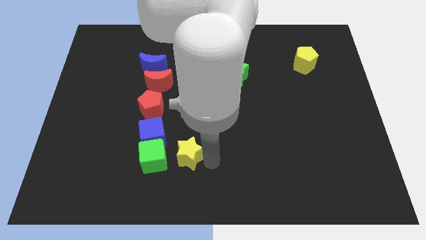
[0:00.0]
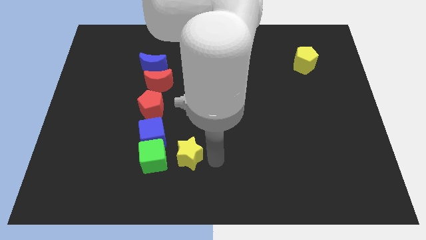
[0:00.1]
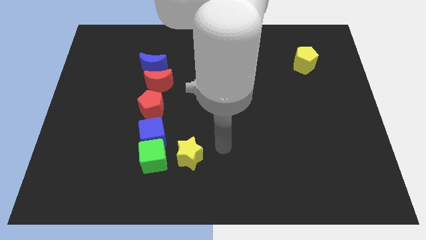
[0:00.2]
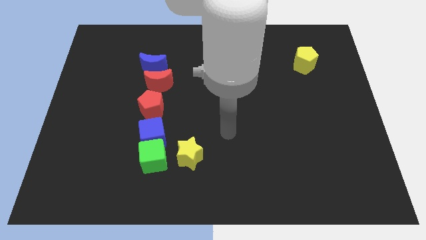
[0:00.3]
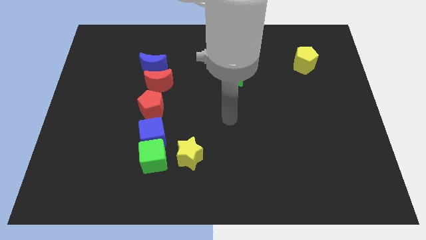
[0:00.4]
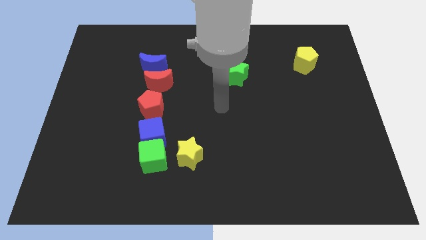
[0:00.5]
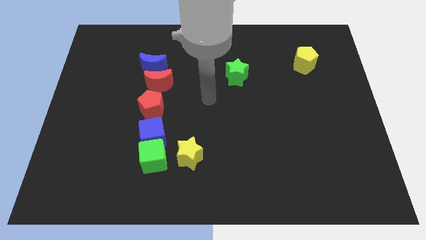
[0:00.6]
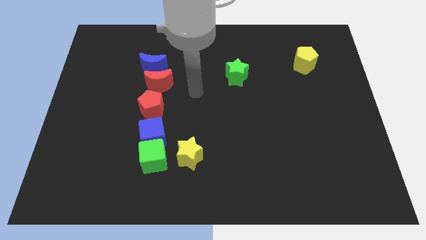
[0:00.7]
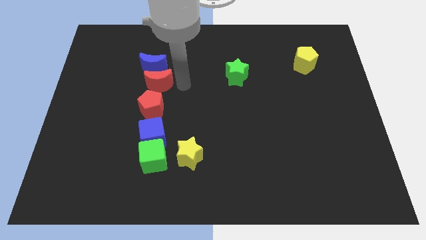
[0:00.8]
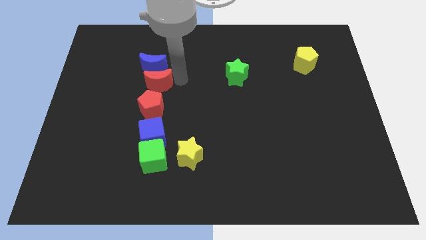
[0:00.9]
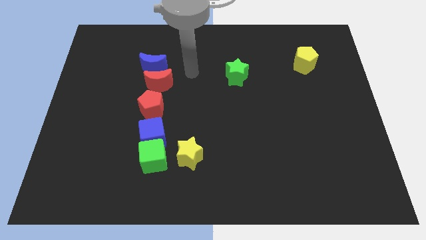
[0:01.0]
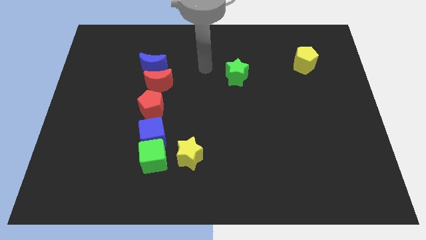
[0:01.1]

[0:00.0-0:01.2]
place your arm at the left of the green star

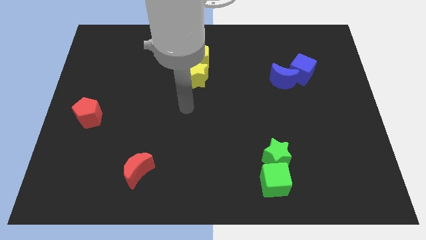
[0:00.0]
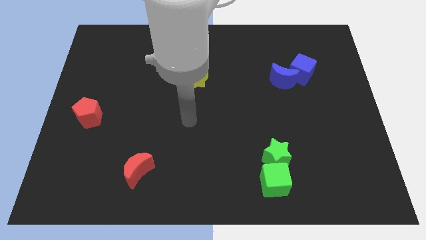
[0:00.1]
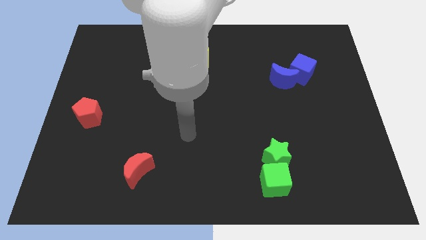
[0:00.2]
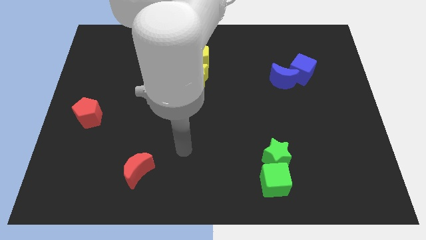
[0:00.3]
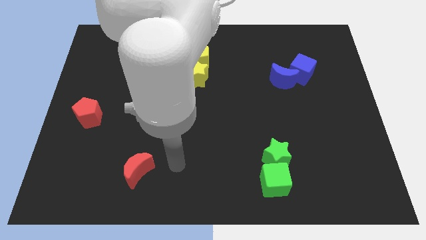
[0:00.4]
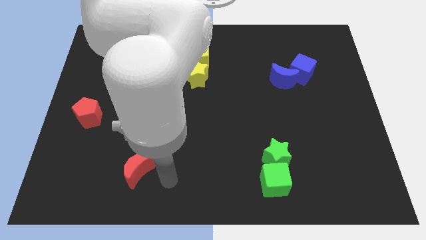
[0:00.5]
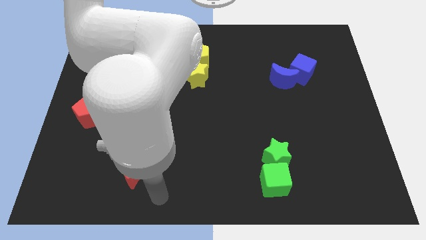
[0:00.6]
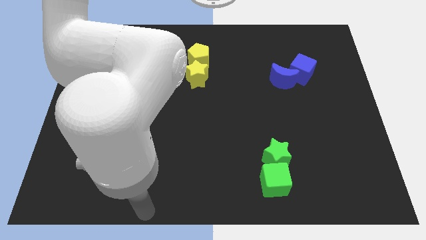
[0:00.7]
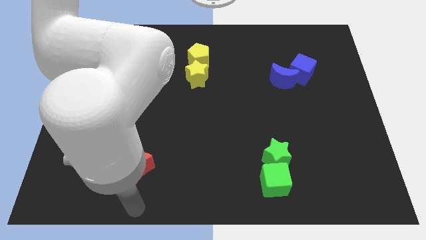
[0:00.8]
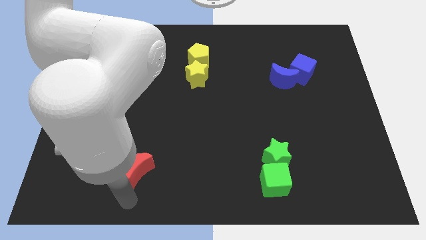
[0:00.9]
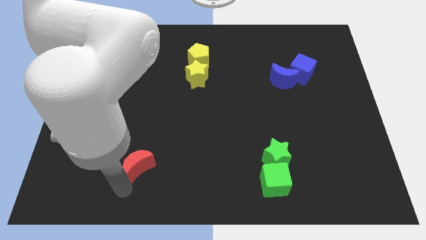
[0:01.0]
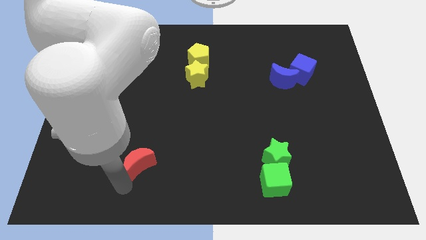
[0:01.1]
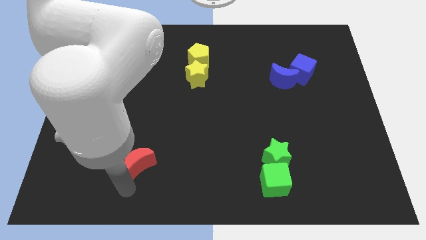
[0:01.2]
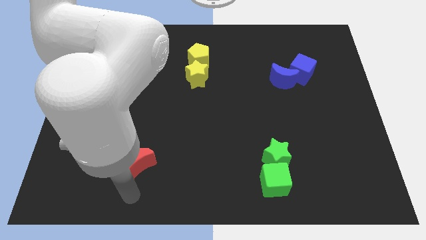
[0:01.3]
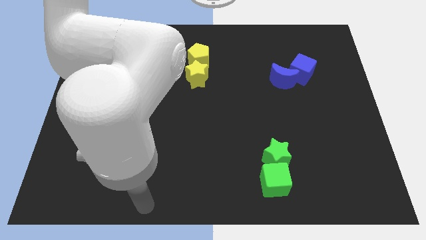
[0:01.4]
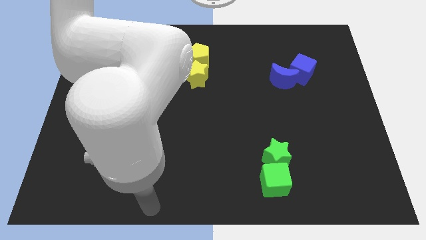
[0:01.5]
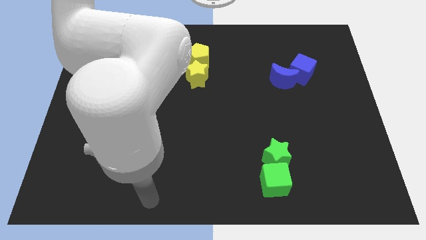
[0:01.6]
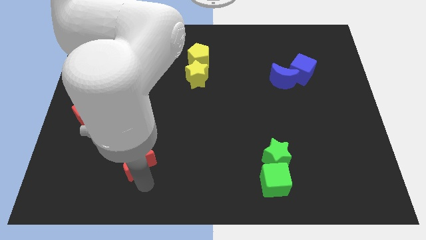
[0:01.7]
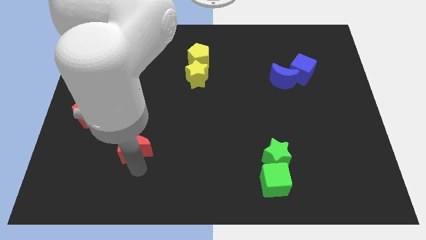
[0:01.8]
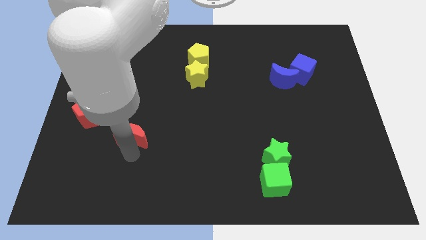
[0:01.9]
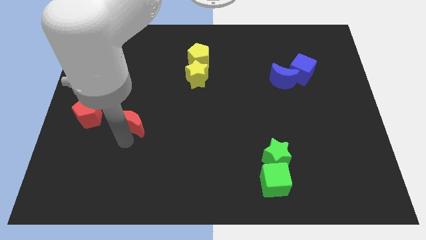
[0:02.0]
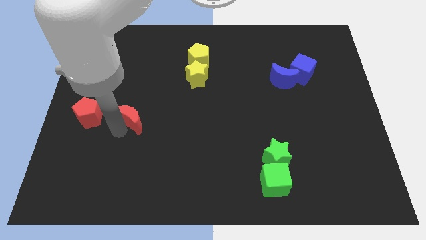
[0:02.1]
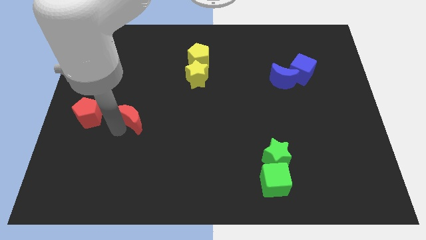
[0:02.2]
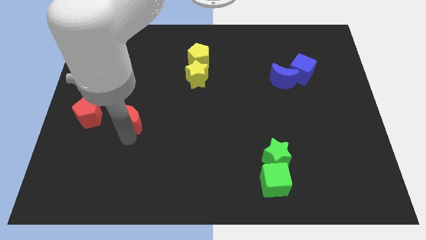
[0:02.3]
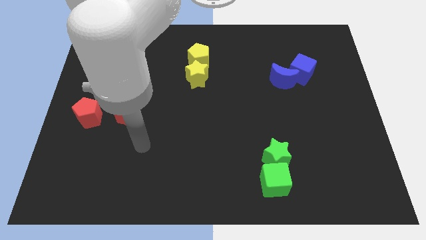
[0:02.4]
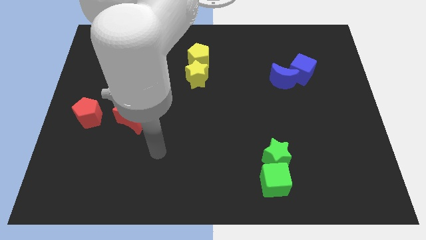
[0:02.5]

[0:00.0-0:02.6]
move the red crescent to the right of red pentagon

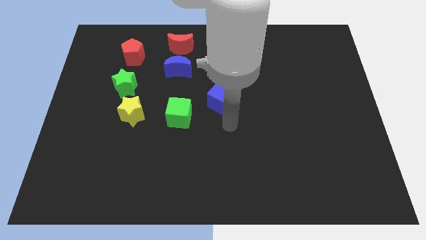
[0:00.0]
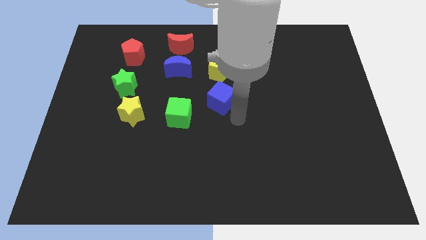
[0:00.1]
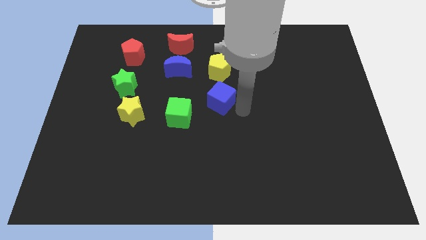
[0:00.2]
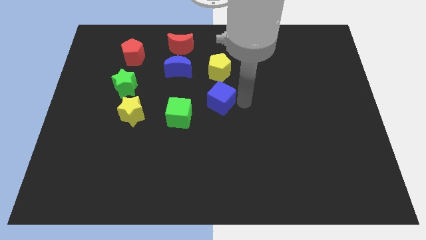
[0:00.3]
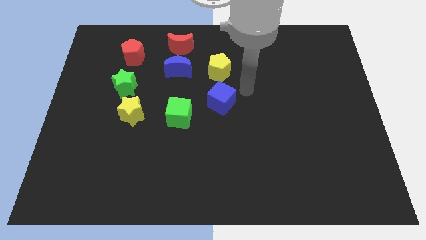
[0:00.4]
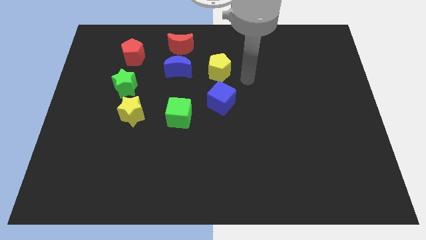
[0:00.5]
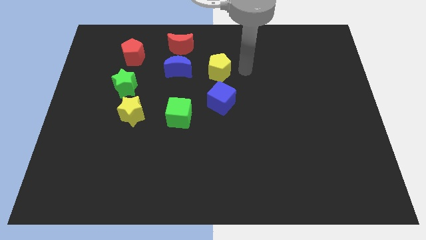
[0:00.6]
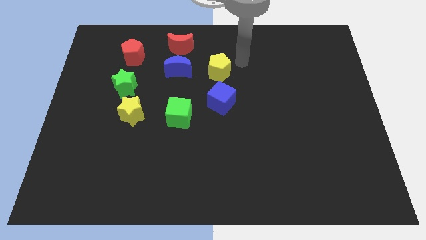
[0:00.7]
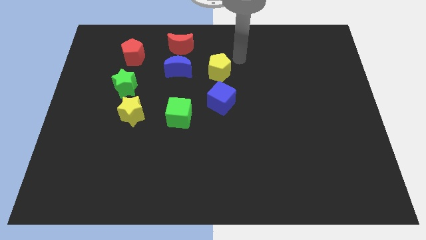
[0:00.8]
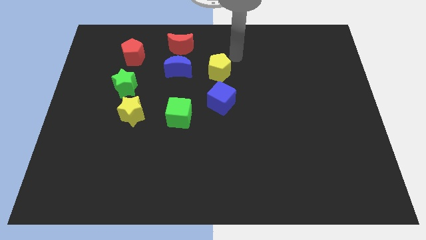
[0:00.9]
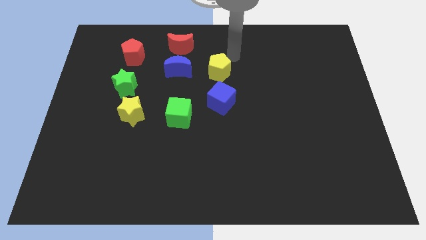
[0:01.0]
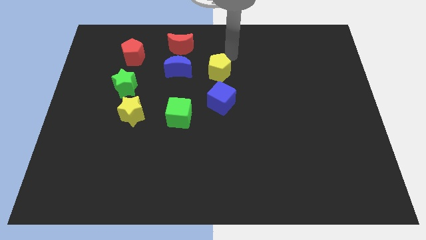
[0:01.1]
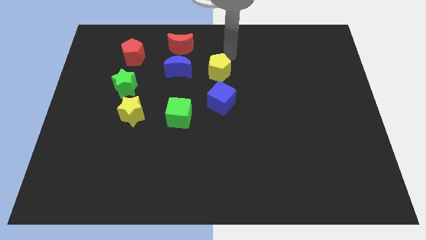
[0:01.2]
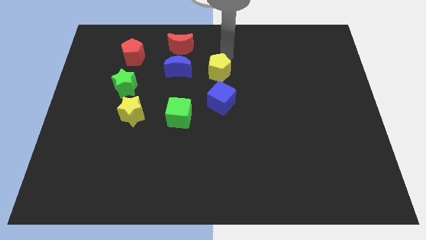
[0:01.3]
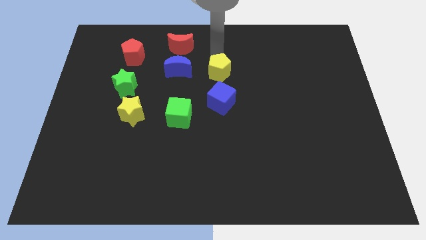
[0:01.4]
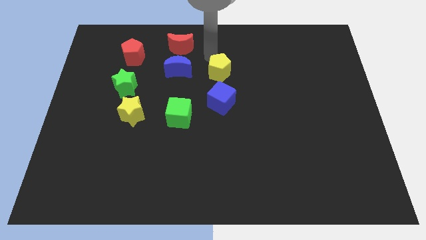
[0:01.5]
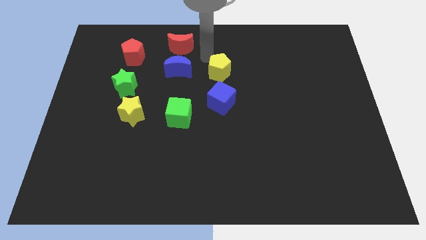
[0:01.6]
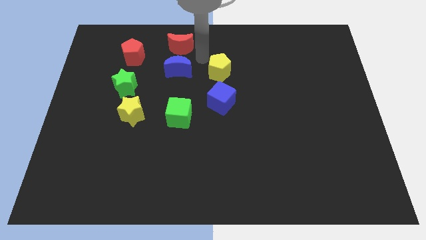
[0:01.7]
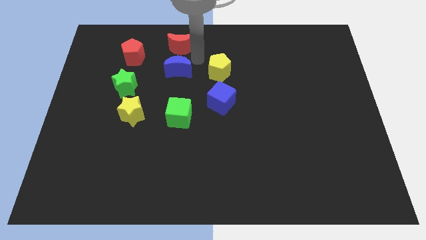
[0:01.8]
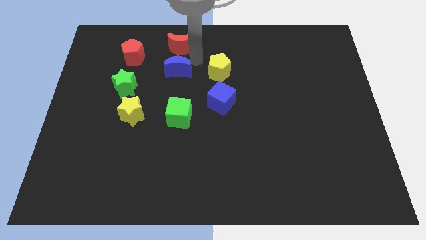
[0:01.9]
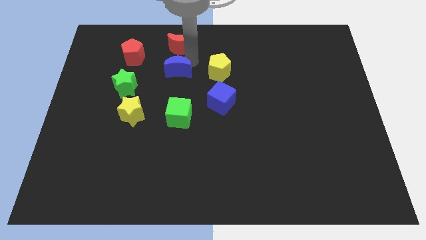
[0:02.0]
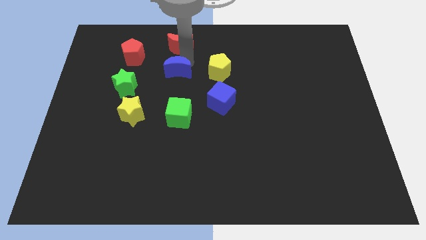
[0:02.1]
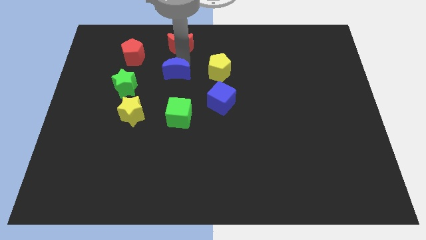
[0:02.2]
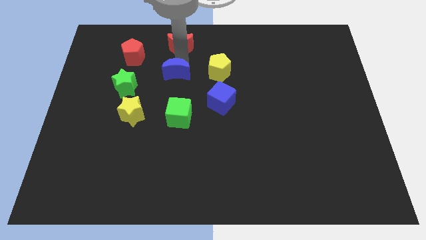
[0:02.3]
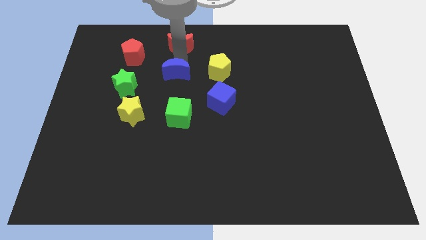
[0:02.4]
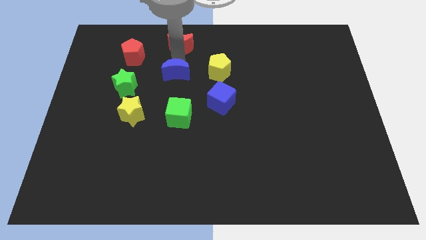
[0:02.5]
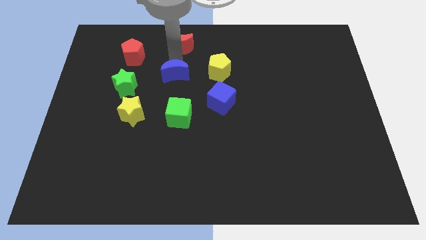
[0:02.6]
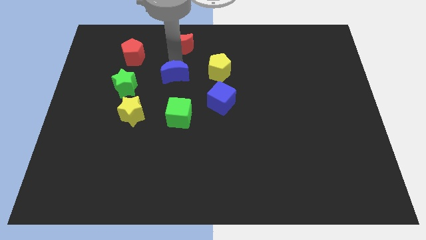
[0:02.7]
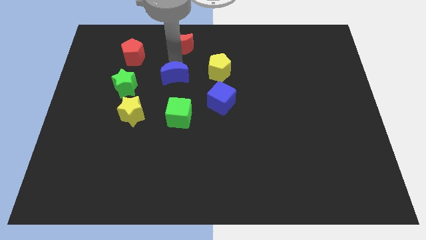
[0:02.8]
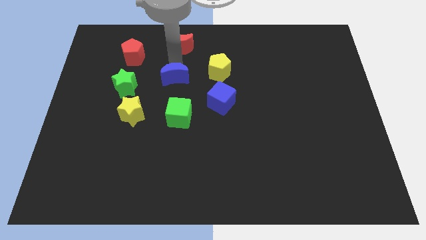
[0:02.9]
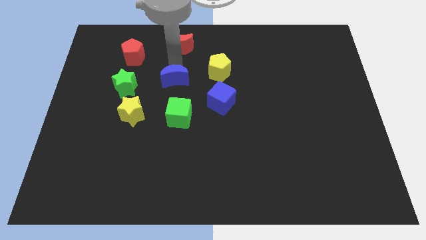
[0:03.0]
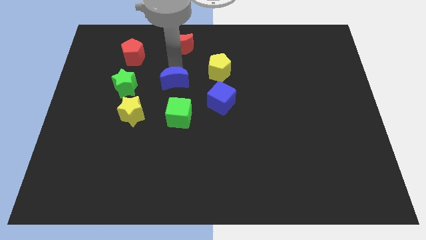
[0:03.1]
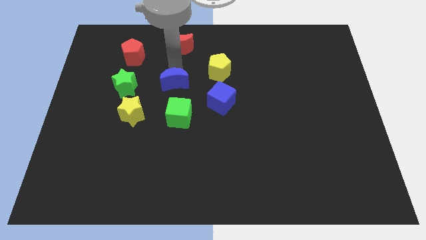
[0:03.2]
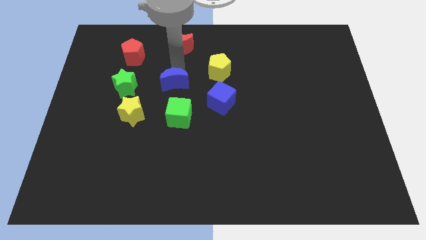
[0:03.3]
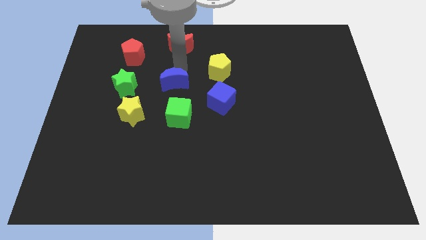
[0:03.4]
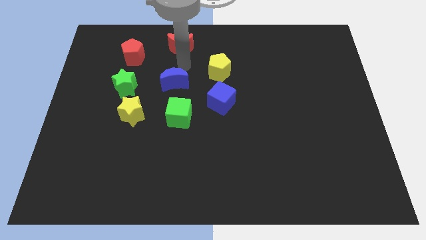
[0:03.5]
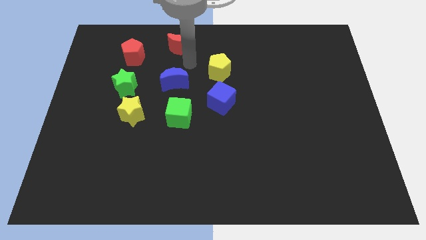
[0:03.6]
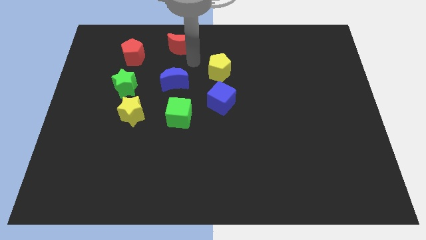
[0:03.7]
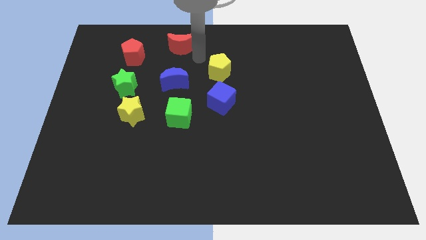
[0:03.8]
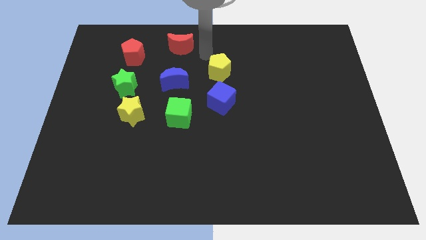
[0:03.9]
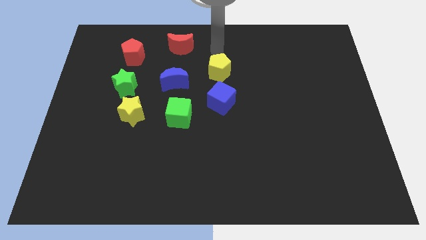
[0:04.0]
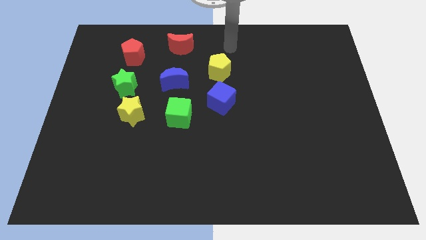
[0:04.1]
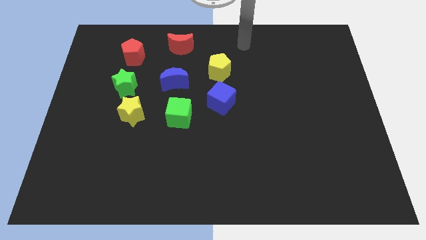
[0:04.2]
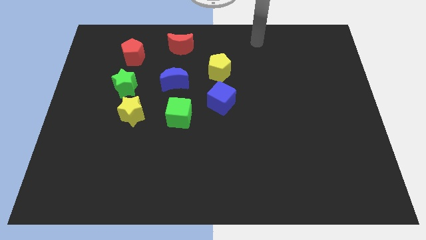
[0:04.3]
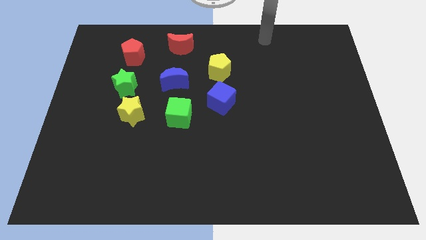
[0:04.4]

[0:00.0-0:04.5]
move the blue moon towards the green cube

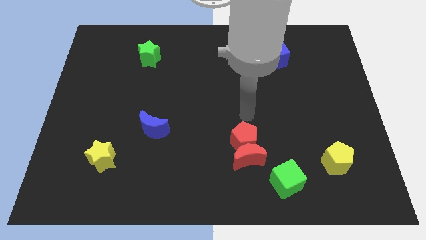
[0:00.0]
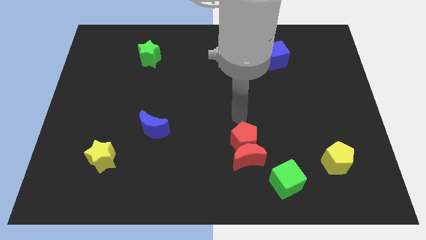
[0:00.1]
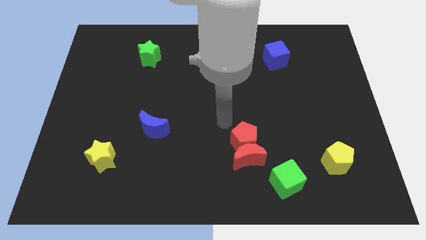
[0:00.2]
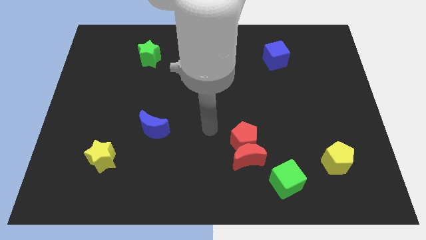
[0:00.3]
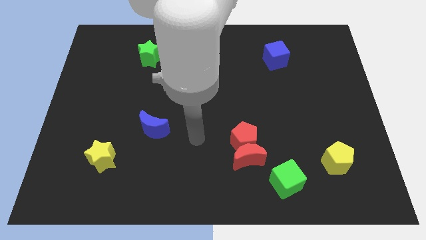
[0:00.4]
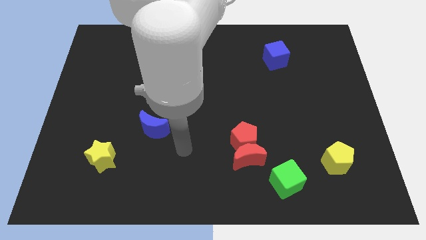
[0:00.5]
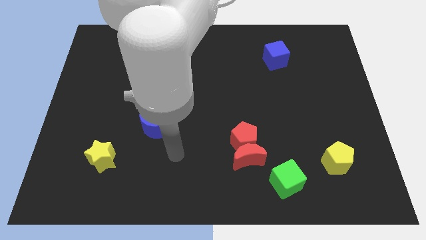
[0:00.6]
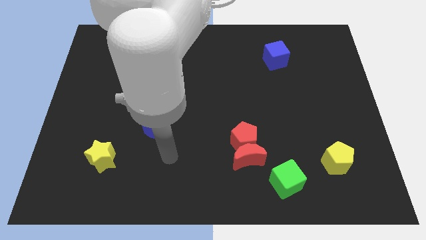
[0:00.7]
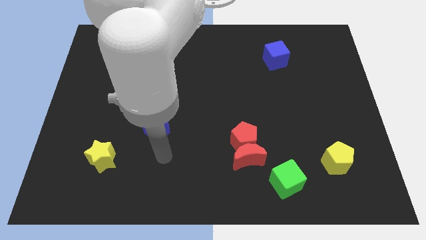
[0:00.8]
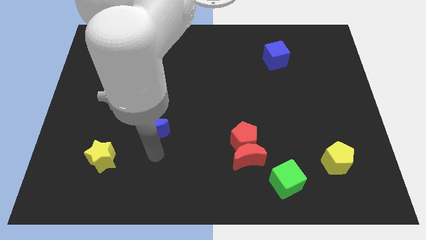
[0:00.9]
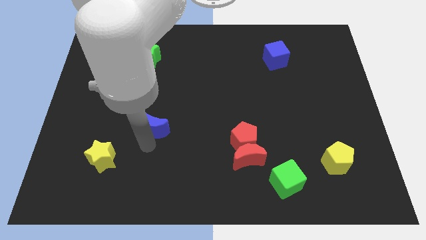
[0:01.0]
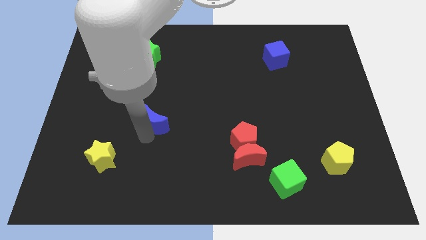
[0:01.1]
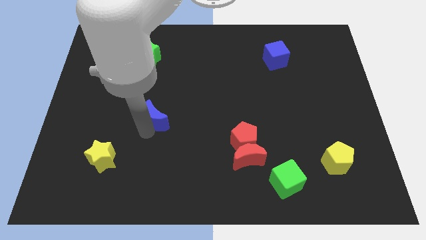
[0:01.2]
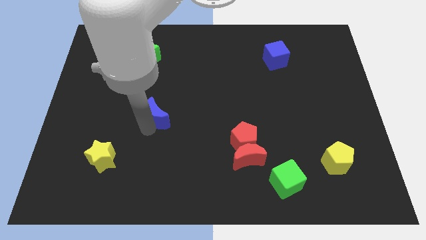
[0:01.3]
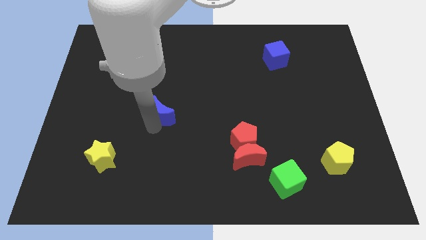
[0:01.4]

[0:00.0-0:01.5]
slightly push the blue crescent upwards of the board
